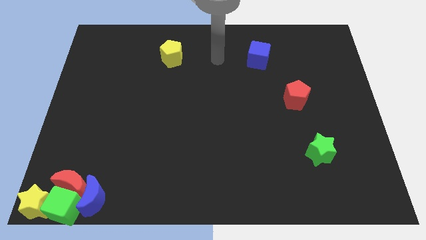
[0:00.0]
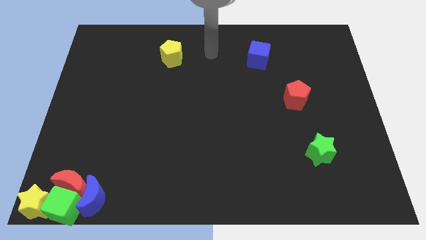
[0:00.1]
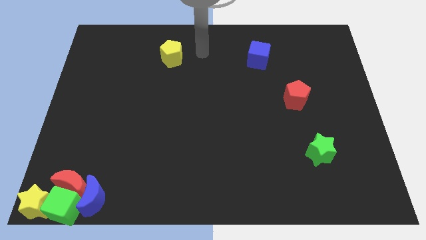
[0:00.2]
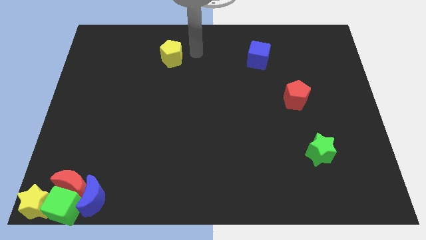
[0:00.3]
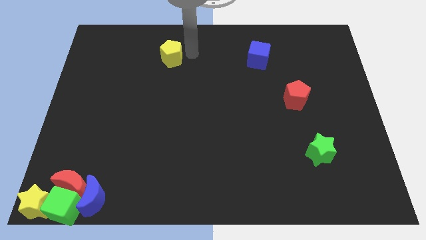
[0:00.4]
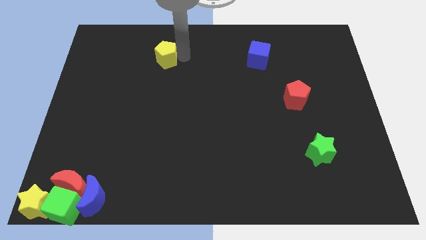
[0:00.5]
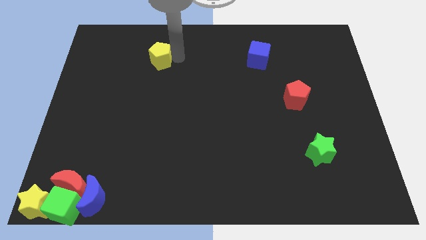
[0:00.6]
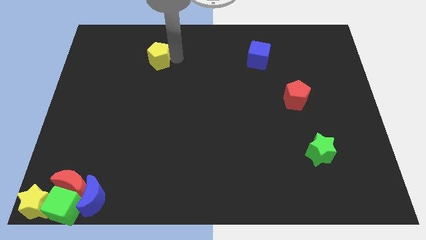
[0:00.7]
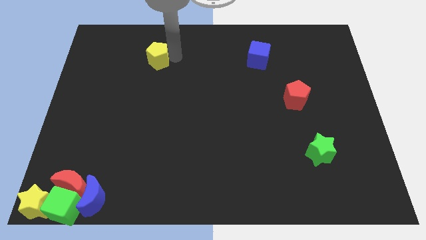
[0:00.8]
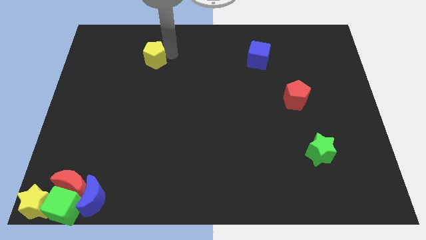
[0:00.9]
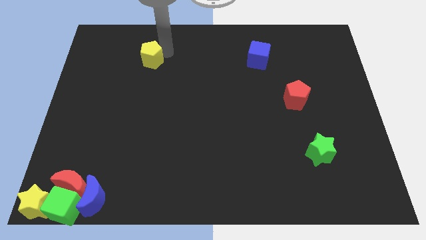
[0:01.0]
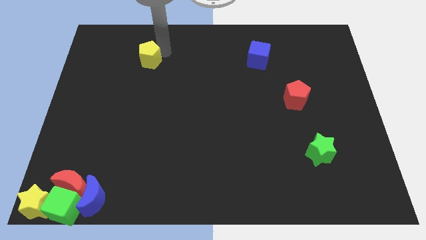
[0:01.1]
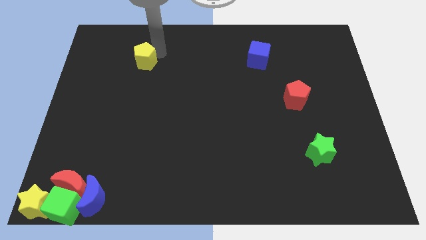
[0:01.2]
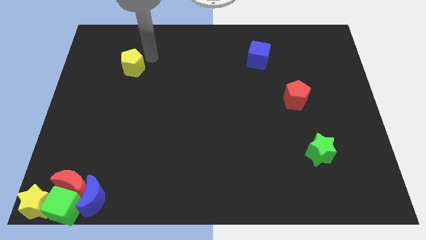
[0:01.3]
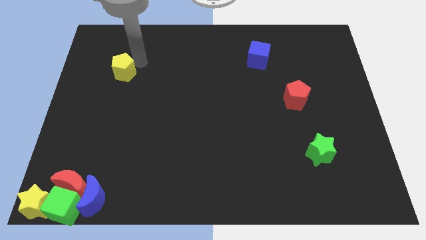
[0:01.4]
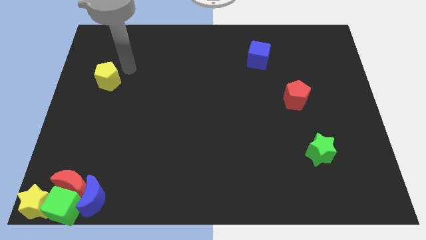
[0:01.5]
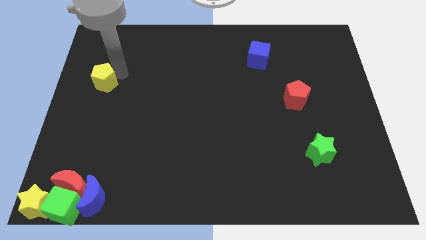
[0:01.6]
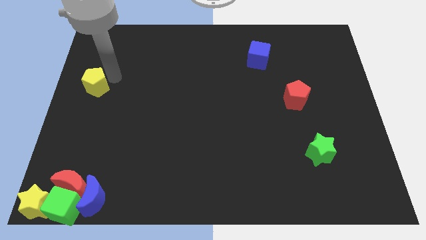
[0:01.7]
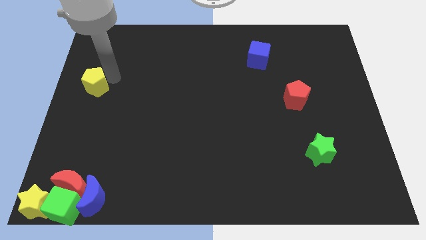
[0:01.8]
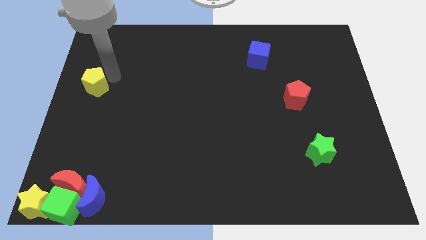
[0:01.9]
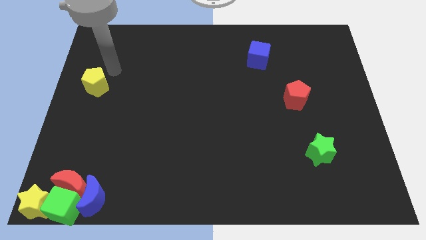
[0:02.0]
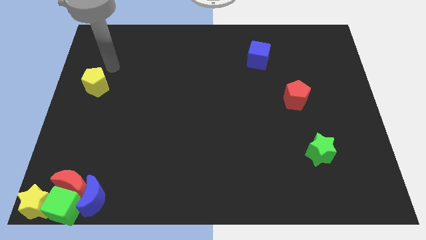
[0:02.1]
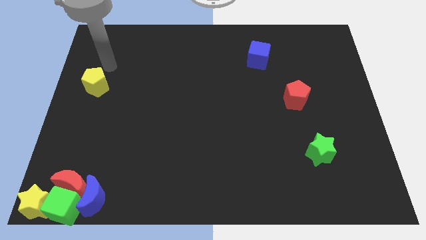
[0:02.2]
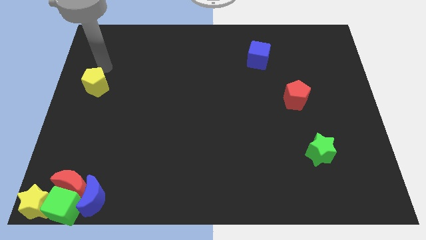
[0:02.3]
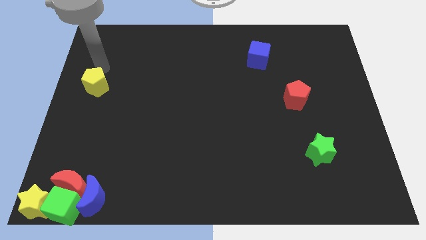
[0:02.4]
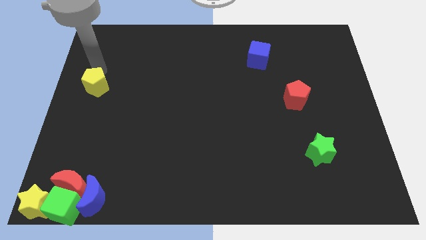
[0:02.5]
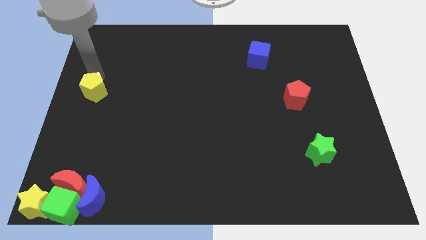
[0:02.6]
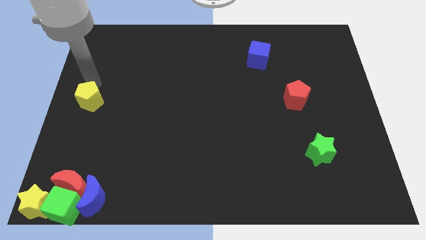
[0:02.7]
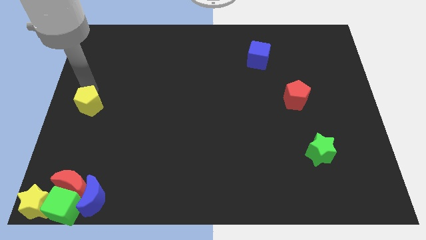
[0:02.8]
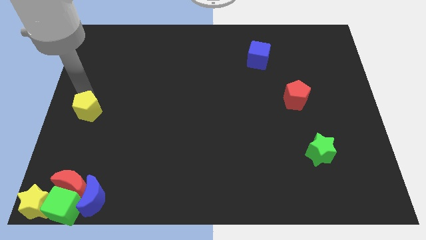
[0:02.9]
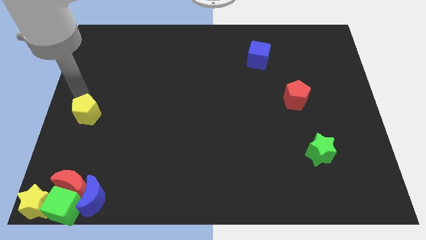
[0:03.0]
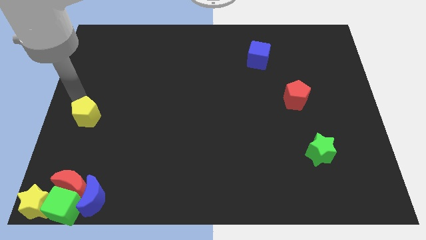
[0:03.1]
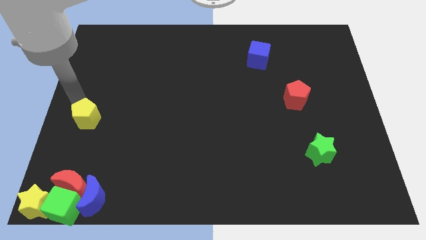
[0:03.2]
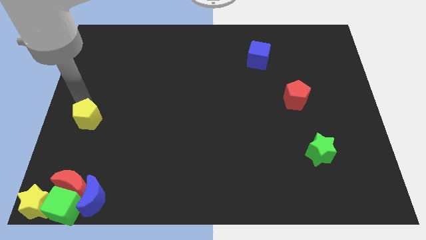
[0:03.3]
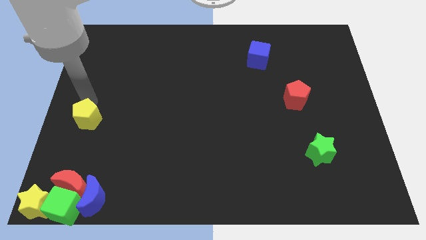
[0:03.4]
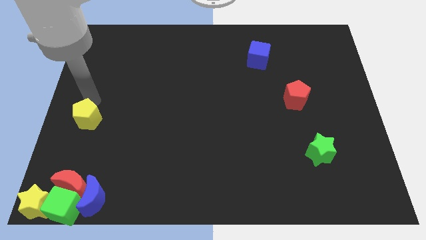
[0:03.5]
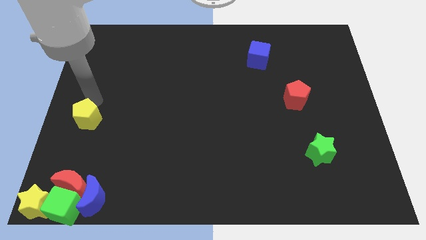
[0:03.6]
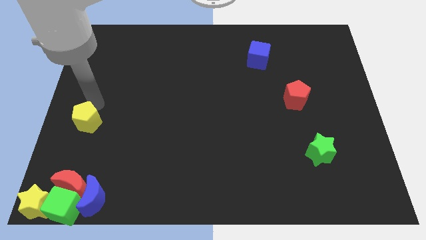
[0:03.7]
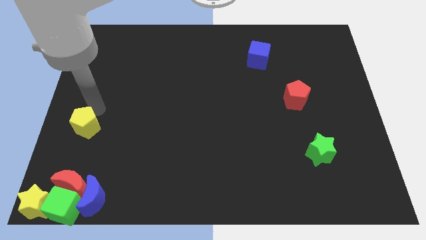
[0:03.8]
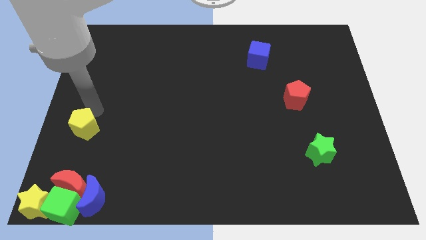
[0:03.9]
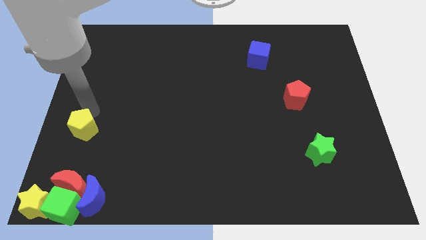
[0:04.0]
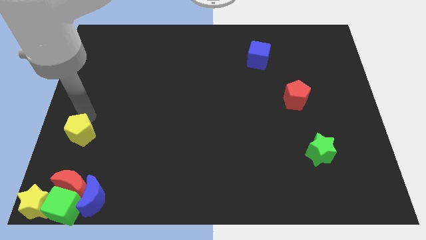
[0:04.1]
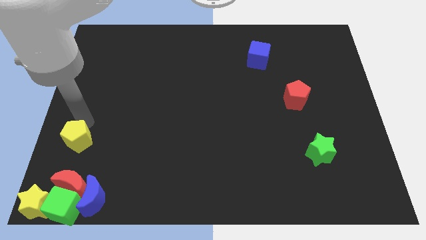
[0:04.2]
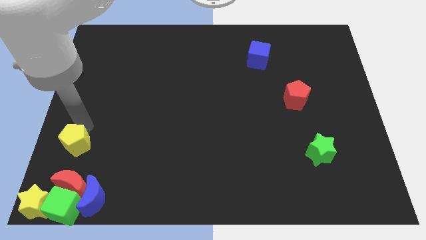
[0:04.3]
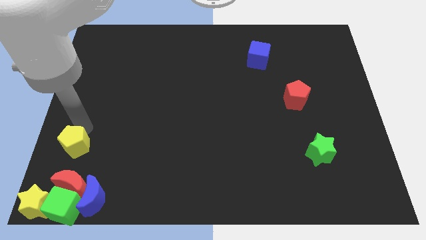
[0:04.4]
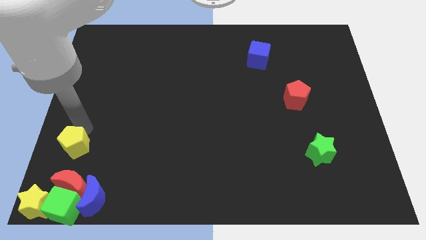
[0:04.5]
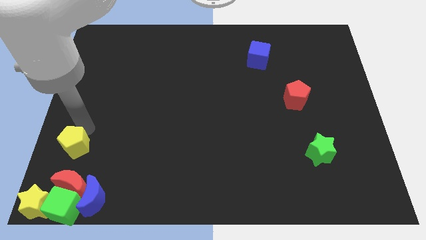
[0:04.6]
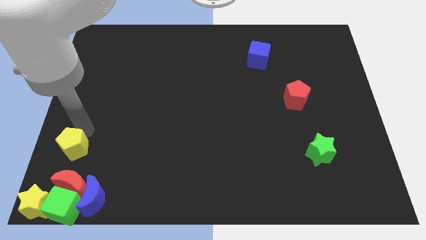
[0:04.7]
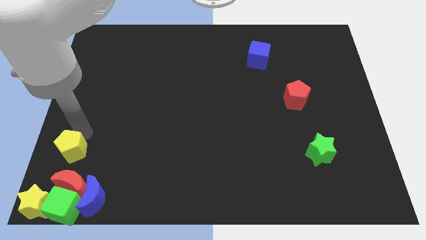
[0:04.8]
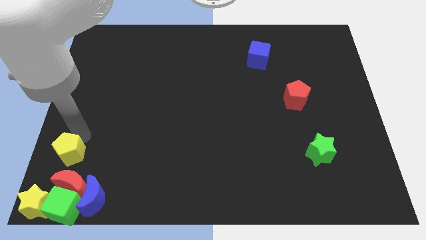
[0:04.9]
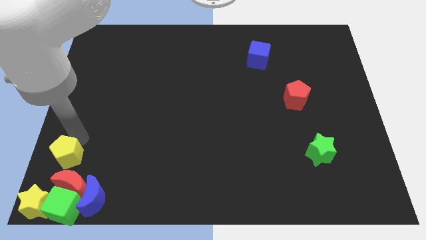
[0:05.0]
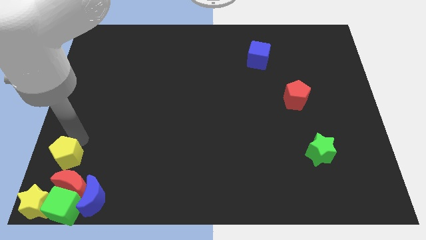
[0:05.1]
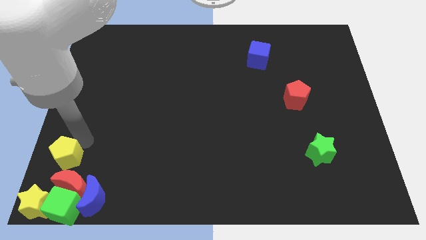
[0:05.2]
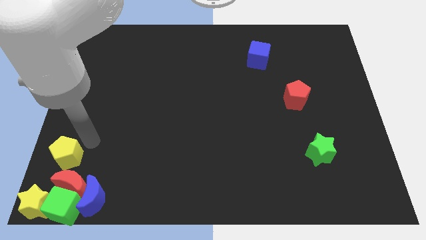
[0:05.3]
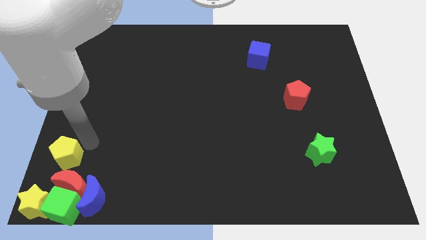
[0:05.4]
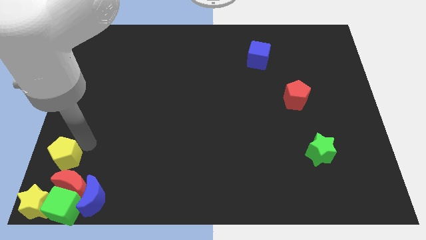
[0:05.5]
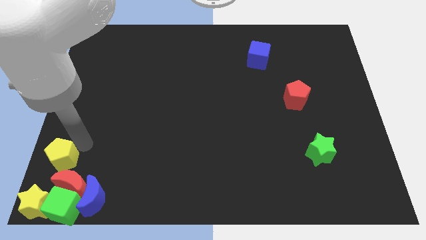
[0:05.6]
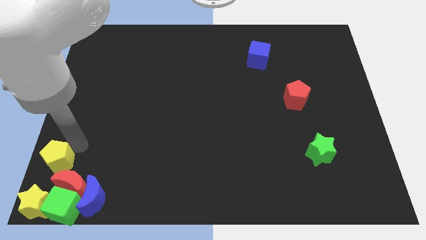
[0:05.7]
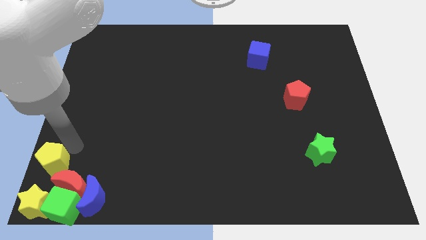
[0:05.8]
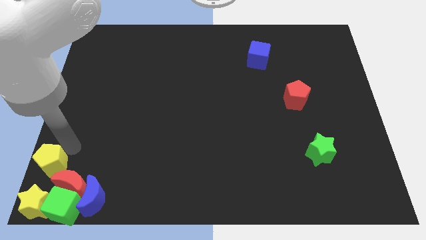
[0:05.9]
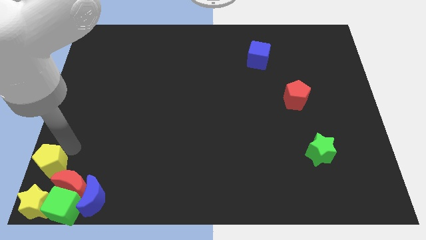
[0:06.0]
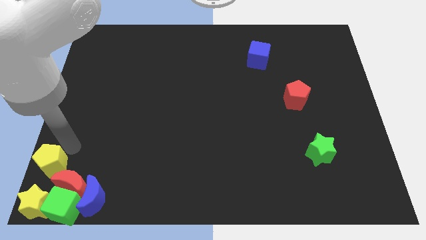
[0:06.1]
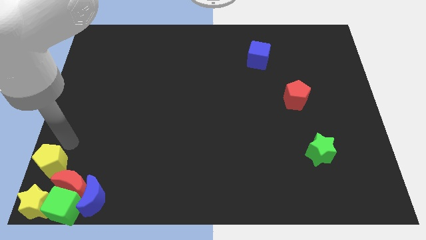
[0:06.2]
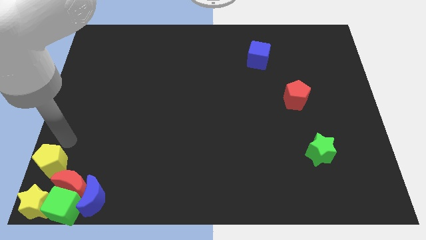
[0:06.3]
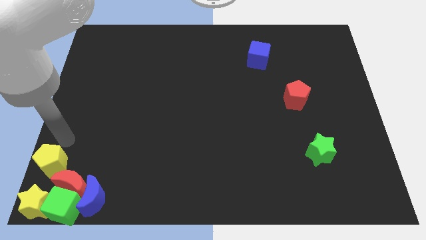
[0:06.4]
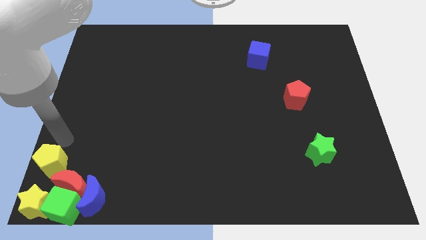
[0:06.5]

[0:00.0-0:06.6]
place the yellow pentagon above the yellow star

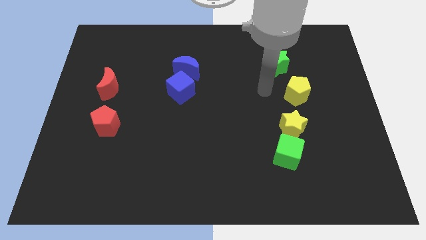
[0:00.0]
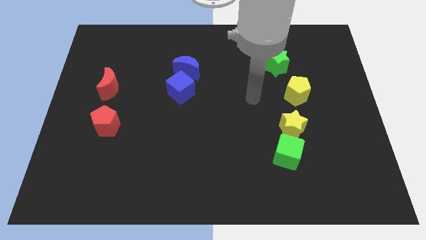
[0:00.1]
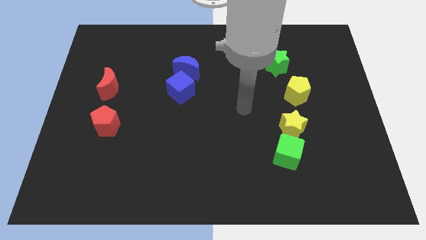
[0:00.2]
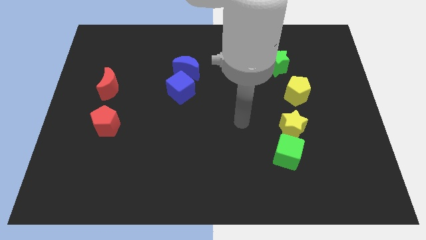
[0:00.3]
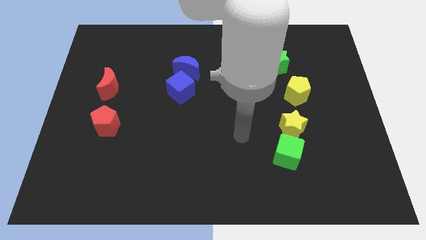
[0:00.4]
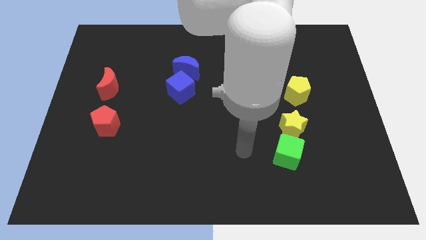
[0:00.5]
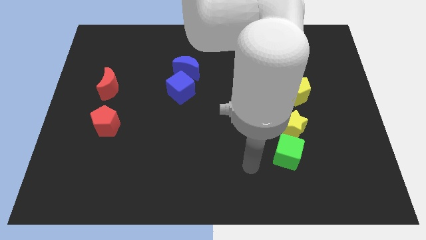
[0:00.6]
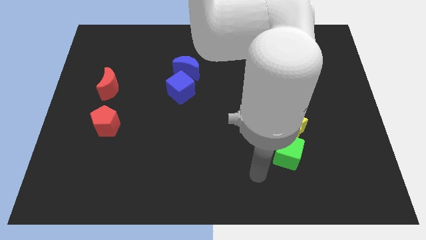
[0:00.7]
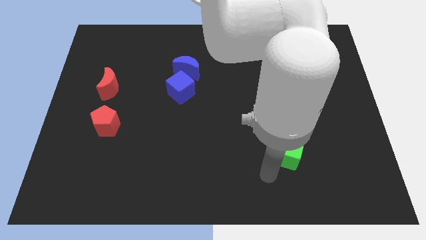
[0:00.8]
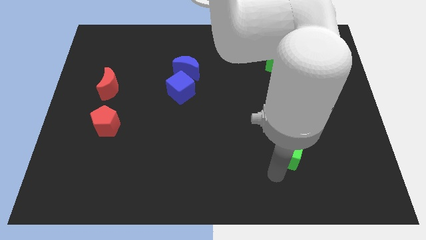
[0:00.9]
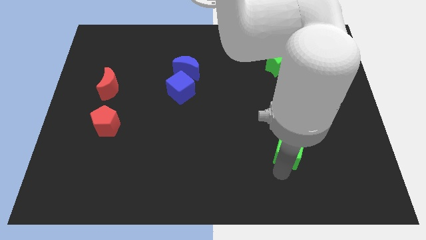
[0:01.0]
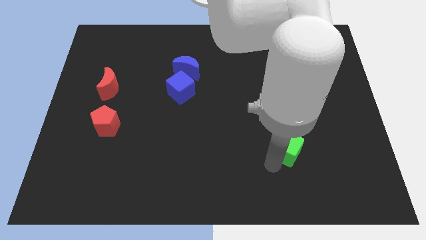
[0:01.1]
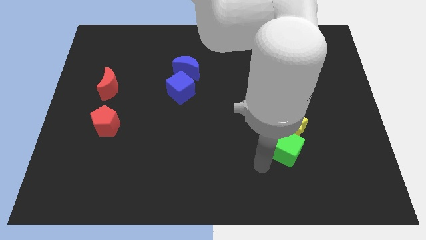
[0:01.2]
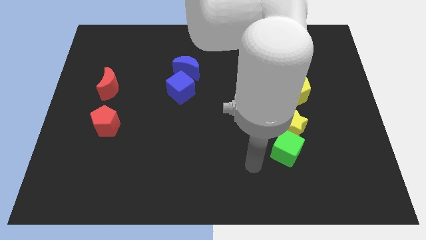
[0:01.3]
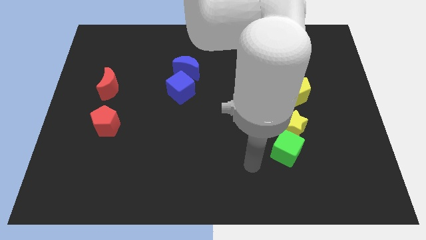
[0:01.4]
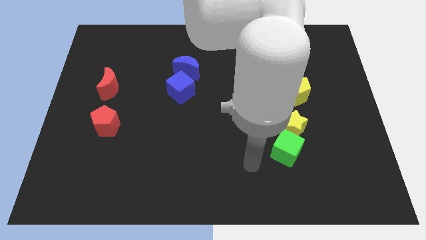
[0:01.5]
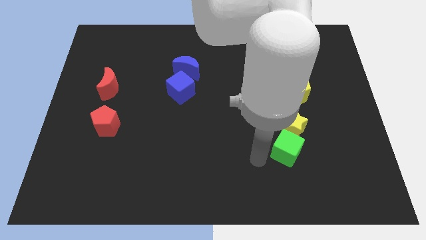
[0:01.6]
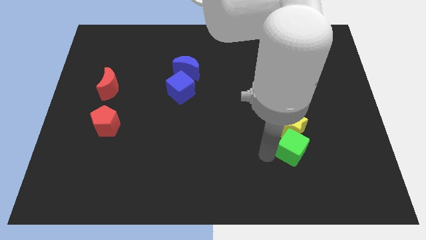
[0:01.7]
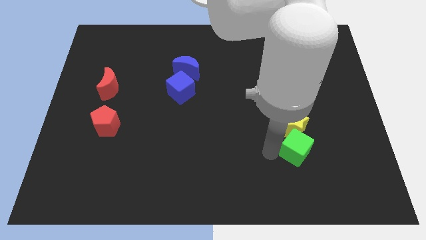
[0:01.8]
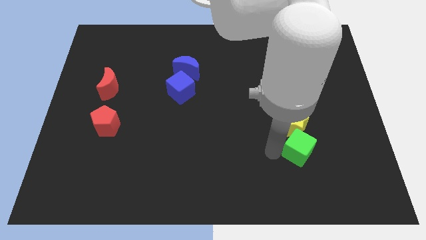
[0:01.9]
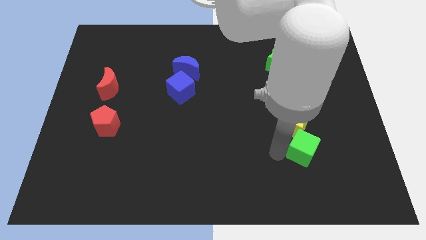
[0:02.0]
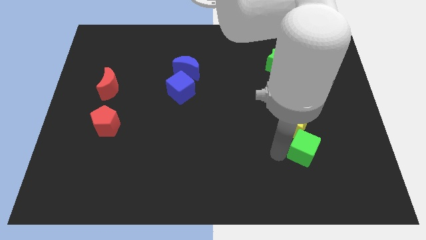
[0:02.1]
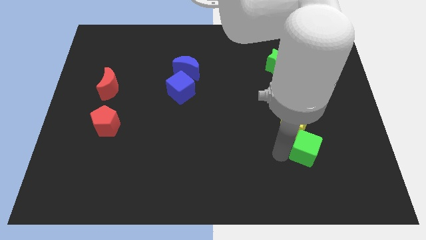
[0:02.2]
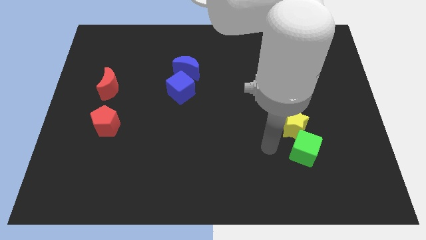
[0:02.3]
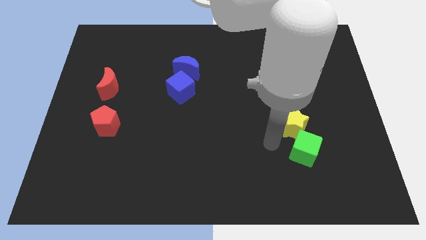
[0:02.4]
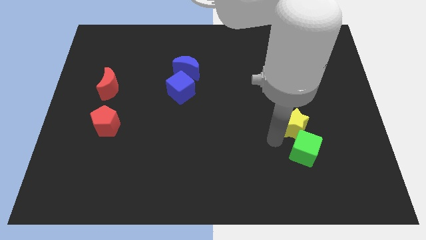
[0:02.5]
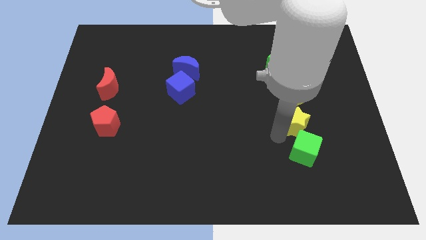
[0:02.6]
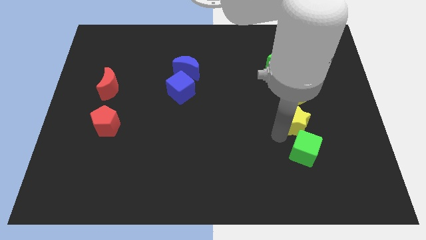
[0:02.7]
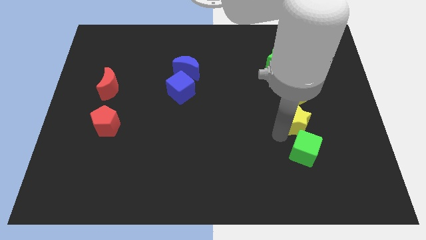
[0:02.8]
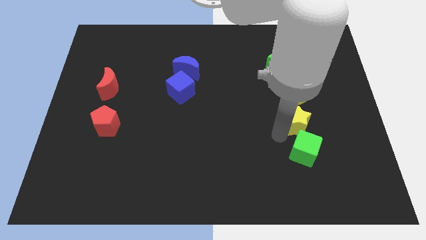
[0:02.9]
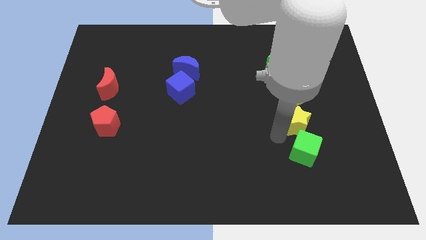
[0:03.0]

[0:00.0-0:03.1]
make the green cube to touch the yellow star
